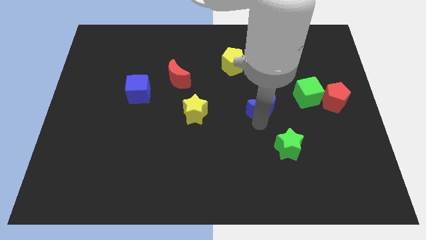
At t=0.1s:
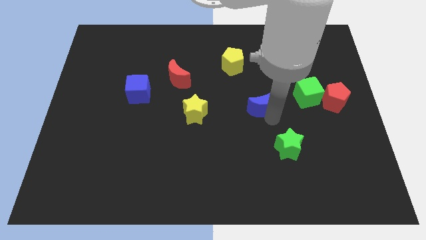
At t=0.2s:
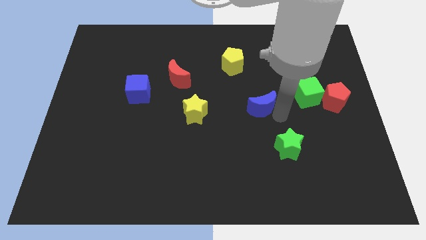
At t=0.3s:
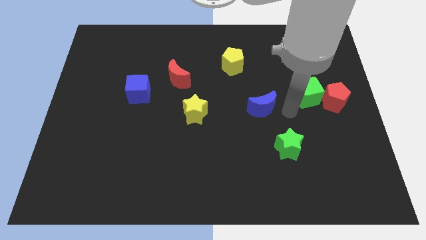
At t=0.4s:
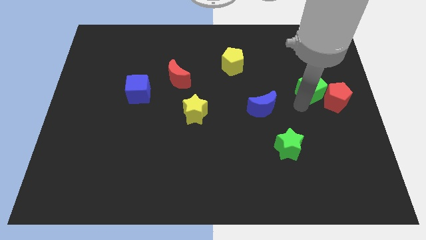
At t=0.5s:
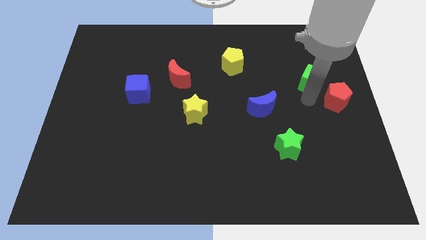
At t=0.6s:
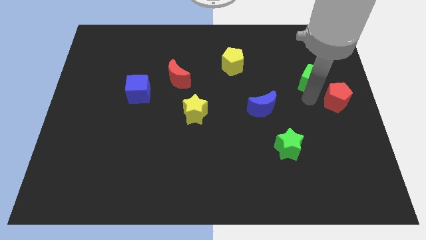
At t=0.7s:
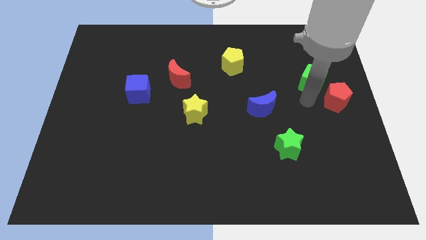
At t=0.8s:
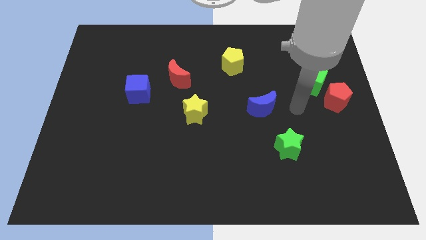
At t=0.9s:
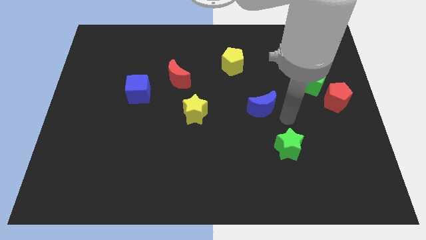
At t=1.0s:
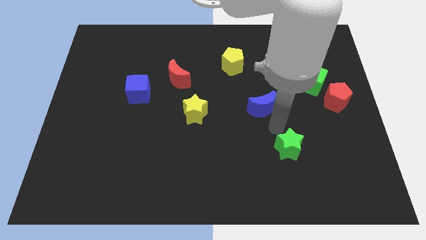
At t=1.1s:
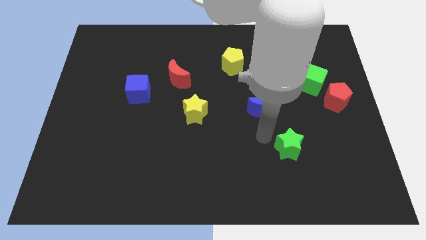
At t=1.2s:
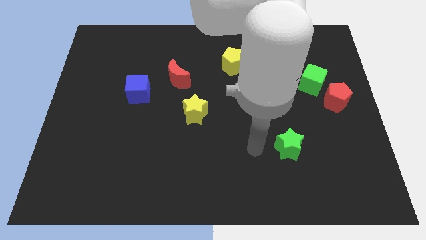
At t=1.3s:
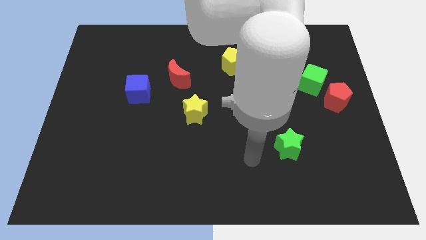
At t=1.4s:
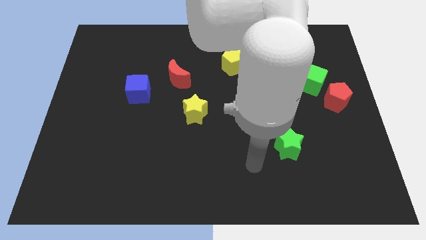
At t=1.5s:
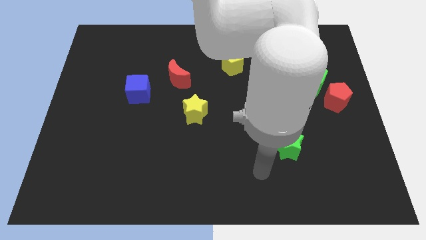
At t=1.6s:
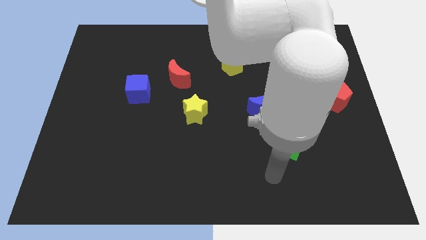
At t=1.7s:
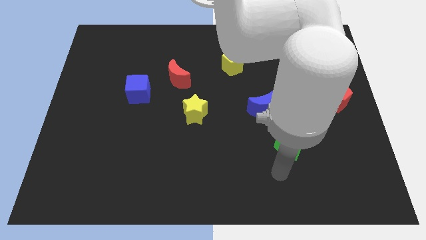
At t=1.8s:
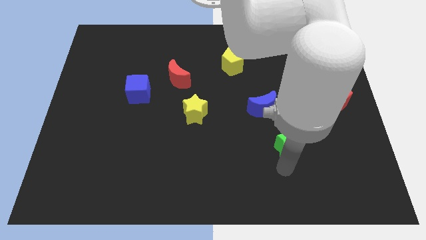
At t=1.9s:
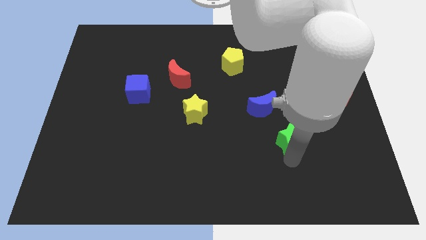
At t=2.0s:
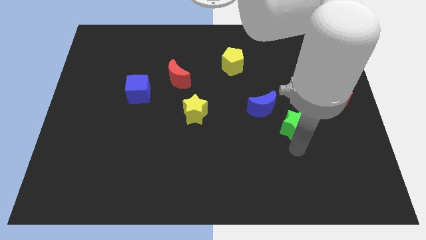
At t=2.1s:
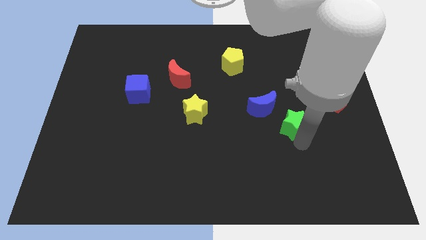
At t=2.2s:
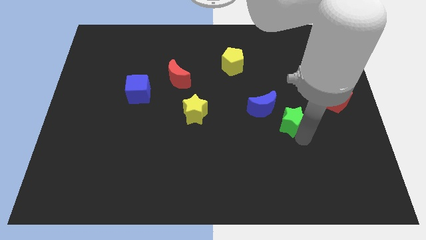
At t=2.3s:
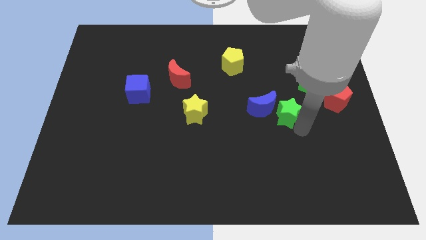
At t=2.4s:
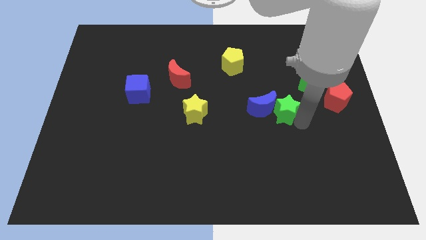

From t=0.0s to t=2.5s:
move the green cube slightly above

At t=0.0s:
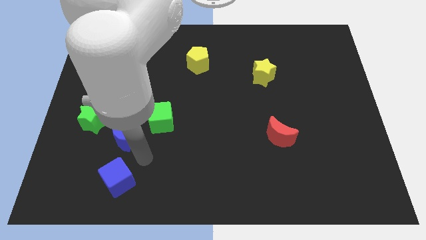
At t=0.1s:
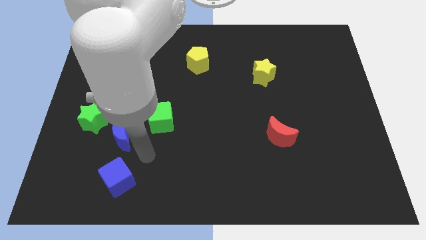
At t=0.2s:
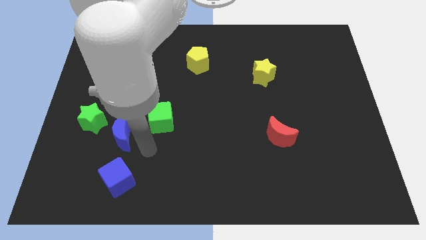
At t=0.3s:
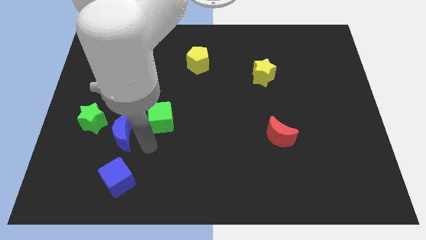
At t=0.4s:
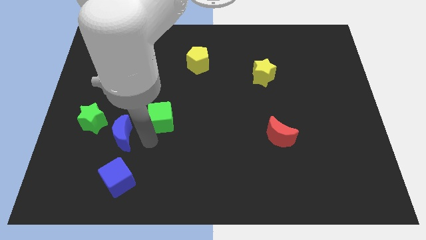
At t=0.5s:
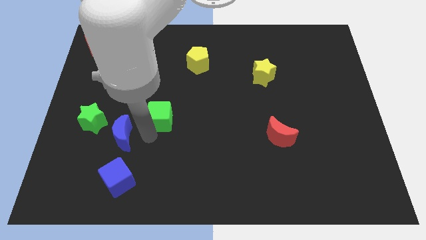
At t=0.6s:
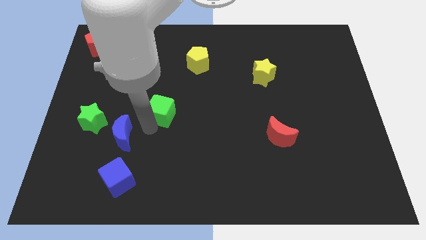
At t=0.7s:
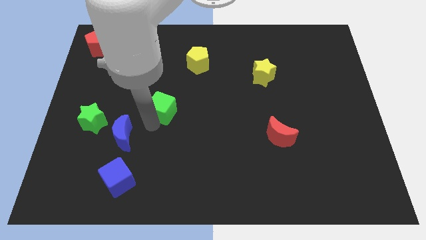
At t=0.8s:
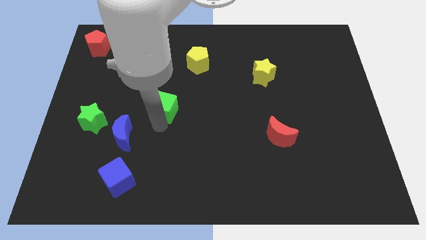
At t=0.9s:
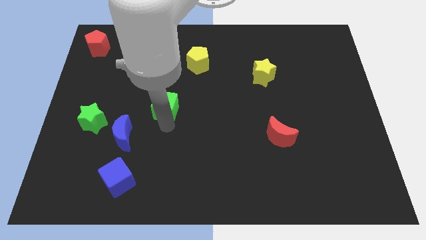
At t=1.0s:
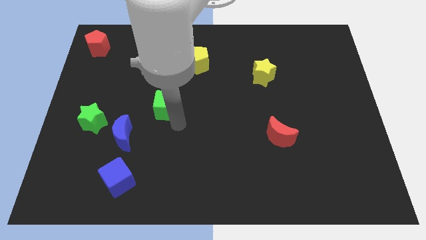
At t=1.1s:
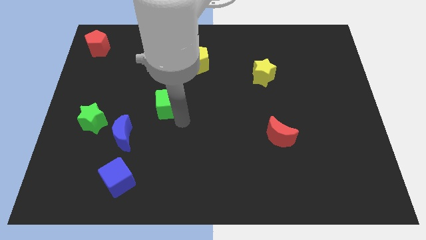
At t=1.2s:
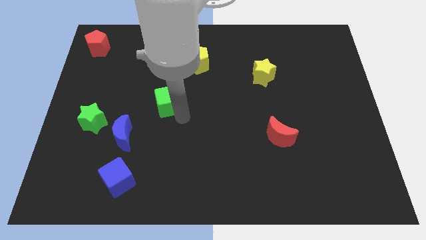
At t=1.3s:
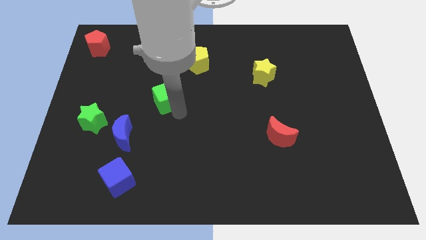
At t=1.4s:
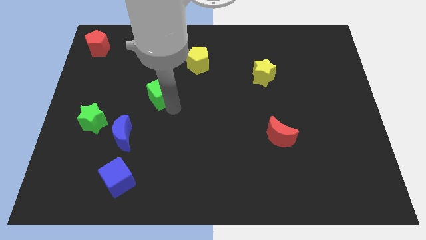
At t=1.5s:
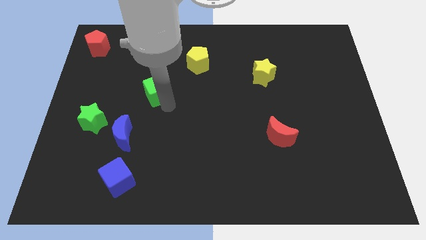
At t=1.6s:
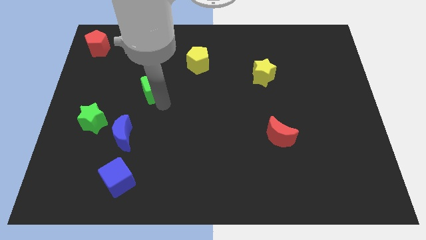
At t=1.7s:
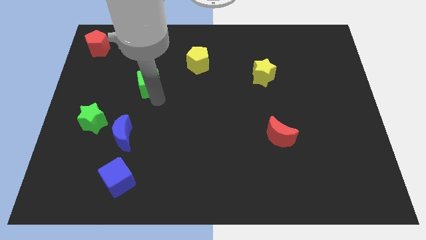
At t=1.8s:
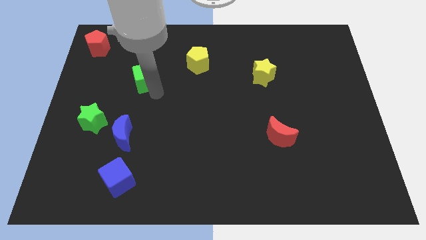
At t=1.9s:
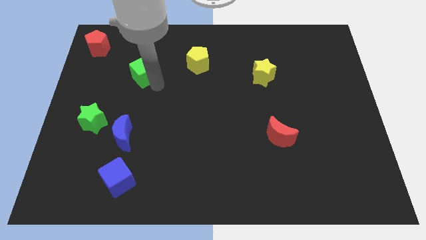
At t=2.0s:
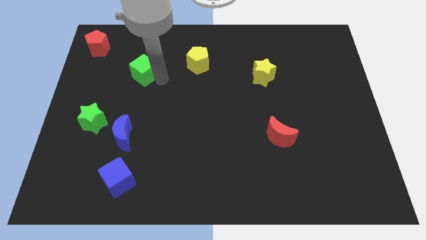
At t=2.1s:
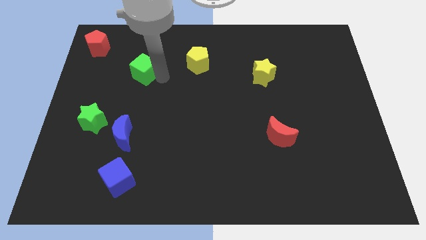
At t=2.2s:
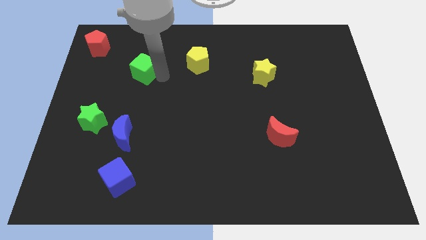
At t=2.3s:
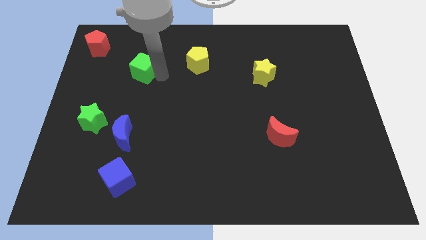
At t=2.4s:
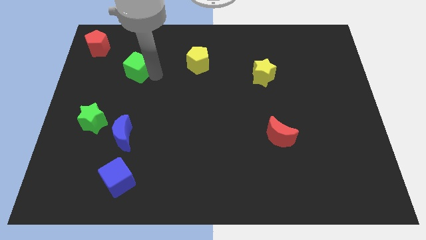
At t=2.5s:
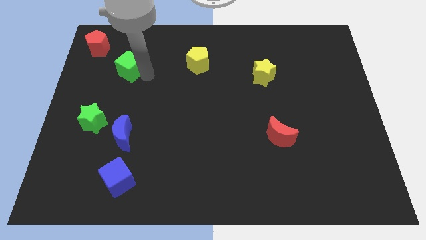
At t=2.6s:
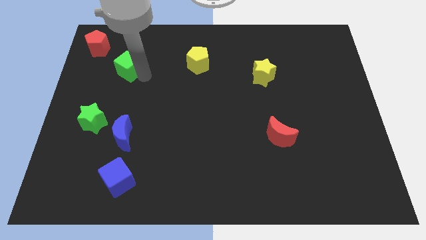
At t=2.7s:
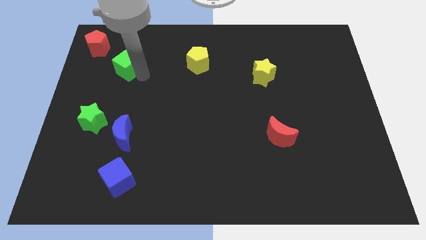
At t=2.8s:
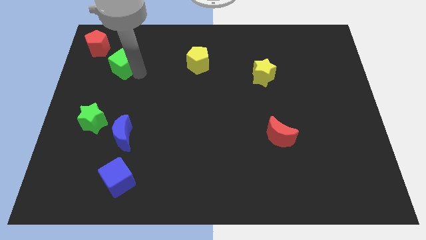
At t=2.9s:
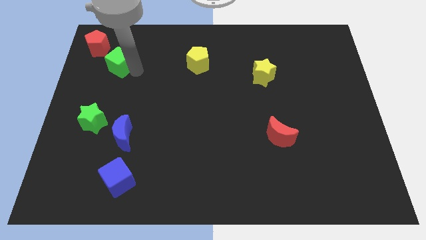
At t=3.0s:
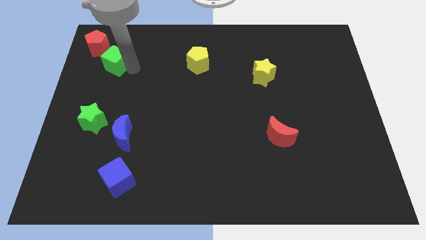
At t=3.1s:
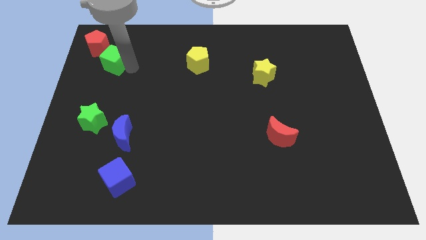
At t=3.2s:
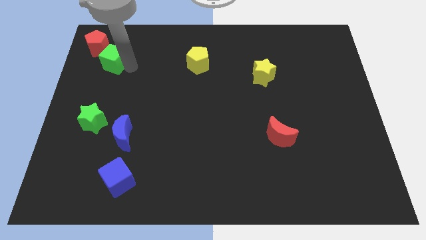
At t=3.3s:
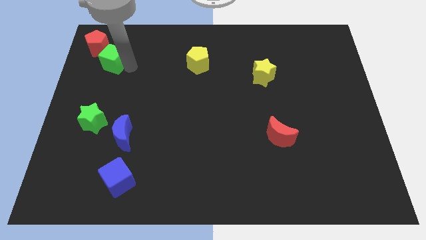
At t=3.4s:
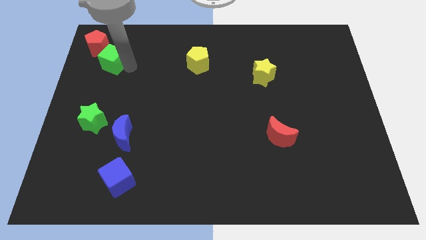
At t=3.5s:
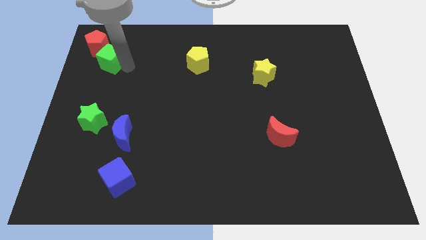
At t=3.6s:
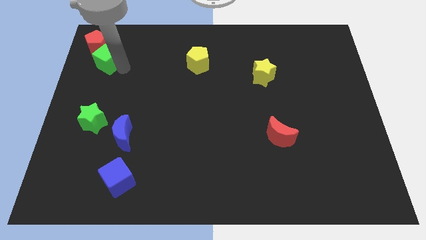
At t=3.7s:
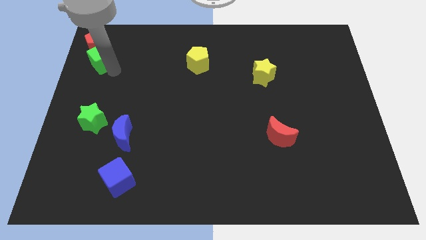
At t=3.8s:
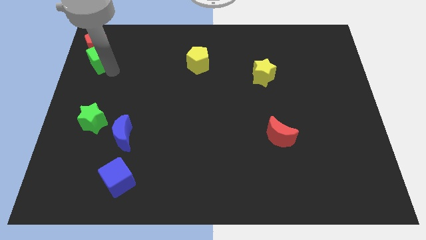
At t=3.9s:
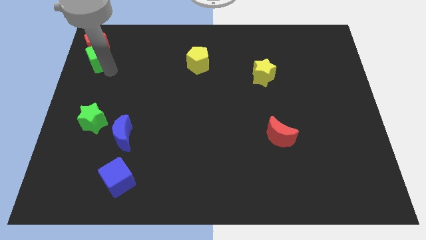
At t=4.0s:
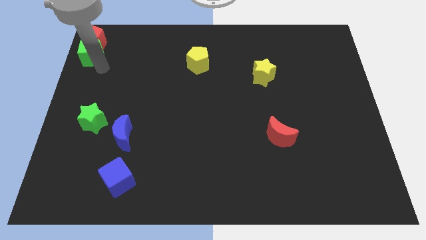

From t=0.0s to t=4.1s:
place the green cube to the bottom side of the red pentagon

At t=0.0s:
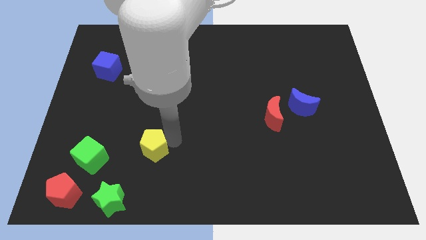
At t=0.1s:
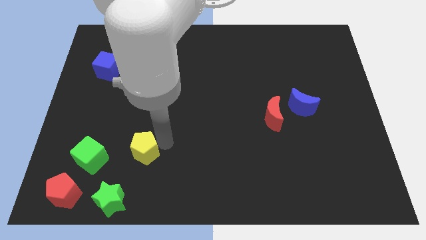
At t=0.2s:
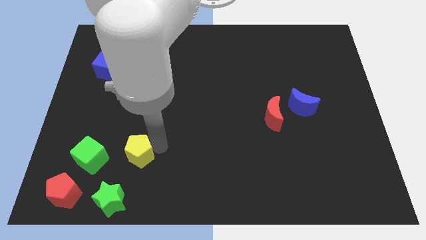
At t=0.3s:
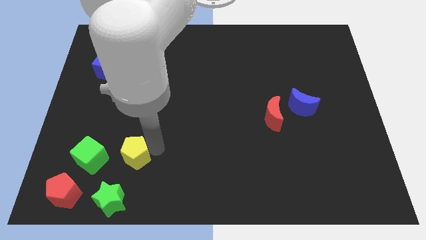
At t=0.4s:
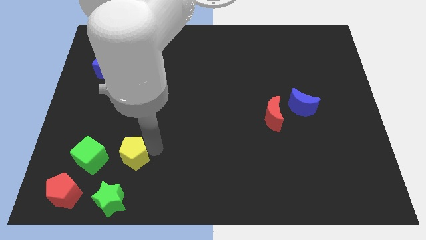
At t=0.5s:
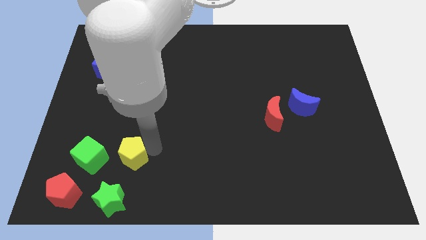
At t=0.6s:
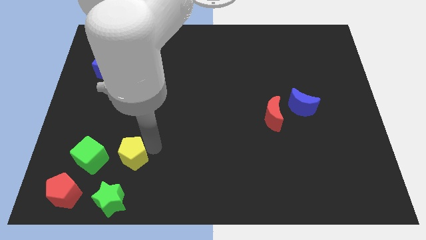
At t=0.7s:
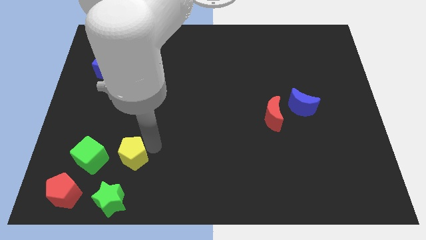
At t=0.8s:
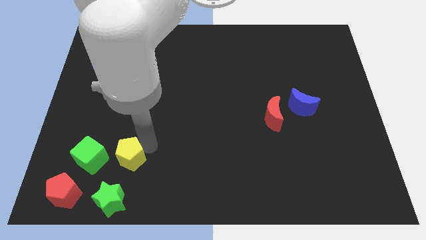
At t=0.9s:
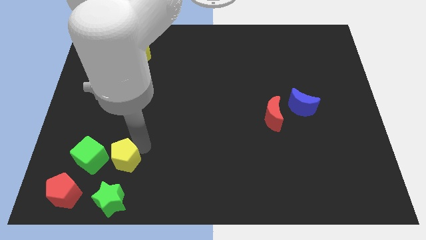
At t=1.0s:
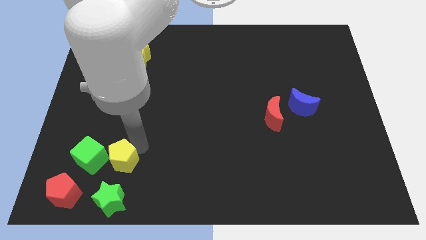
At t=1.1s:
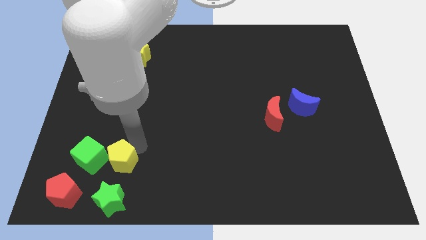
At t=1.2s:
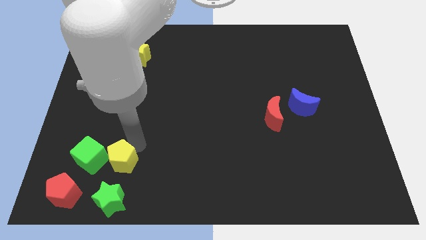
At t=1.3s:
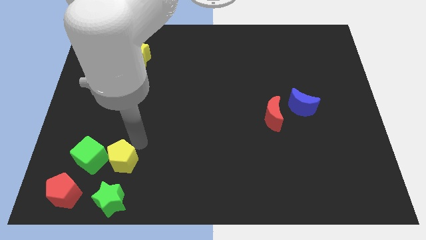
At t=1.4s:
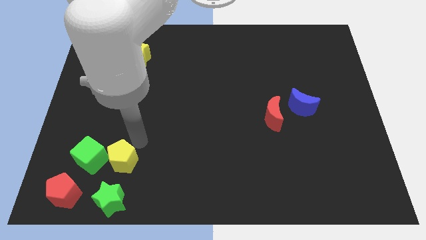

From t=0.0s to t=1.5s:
take the yellow pentagon close to the right side of the green cube

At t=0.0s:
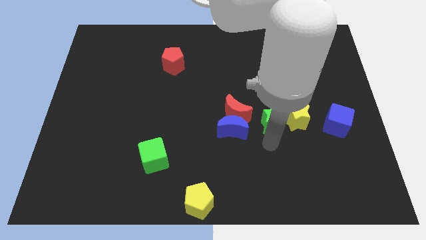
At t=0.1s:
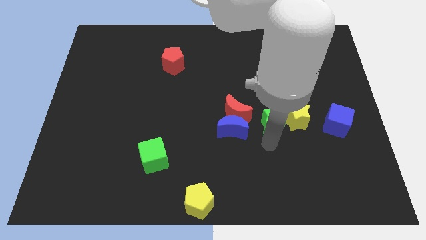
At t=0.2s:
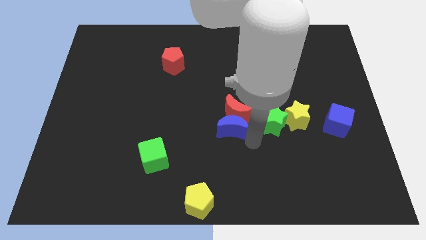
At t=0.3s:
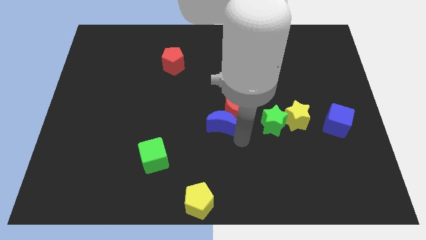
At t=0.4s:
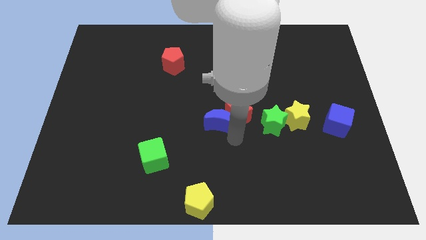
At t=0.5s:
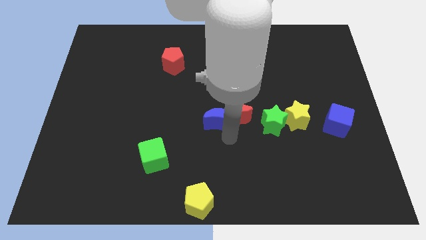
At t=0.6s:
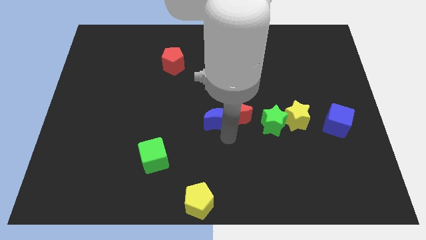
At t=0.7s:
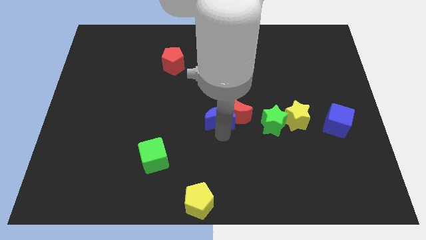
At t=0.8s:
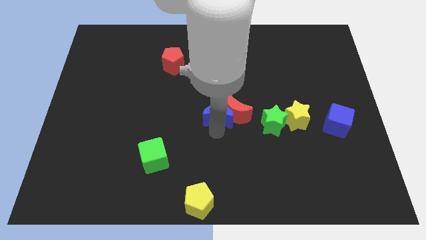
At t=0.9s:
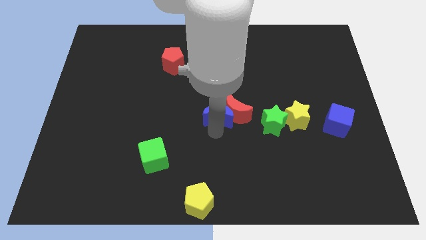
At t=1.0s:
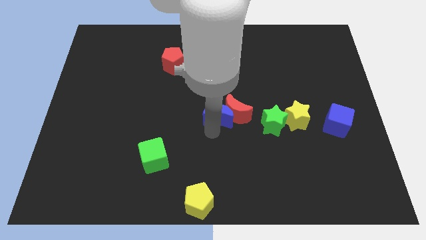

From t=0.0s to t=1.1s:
push the blue crescent slightly to the left
